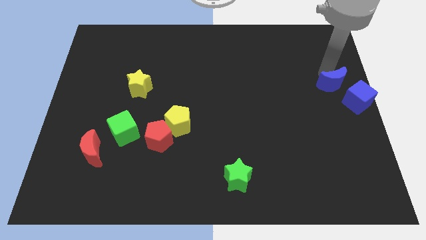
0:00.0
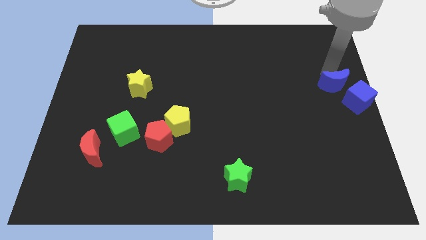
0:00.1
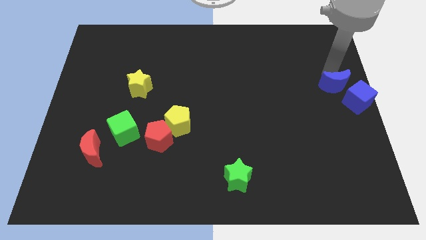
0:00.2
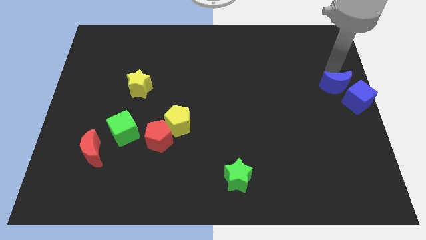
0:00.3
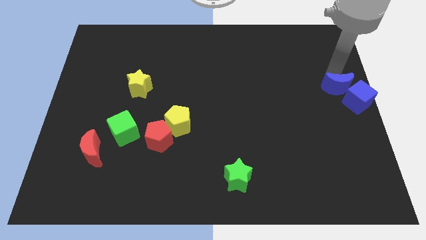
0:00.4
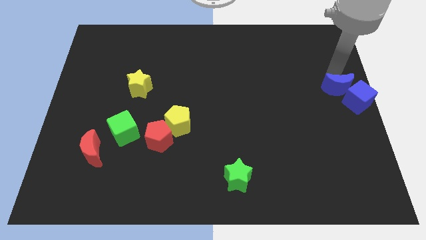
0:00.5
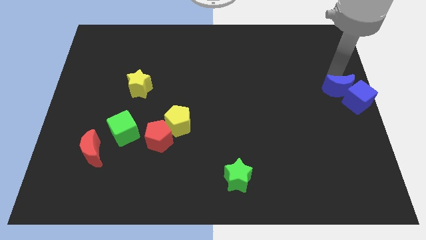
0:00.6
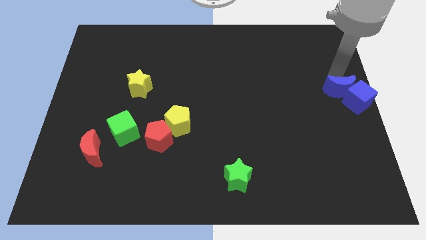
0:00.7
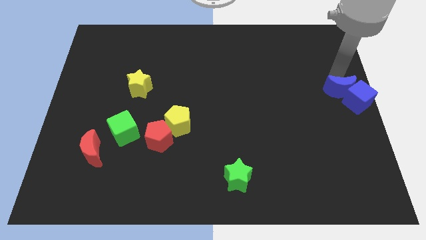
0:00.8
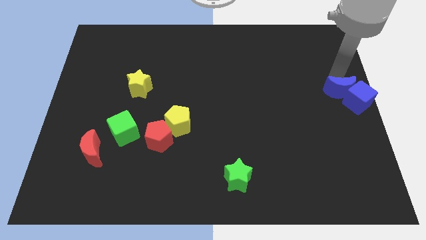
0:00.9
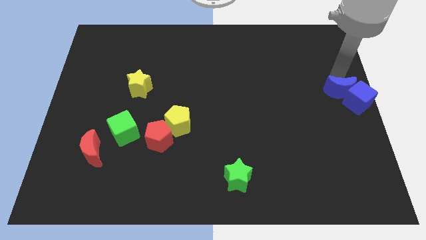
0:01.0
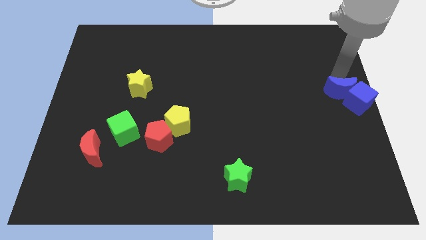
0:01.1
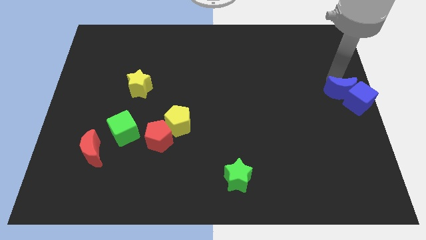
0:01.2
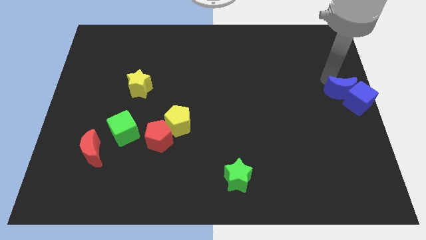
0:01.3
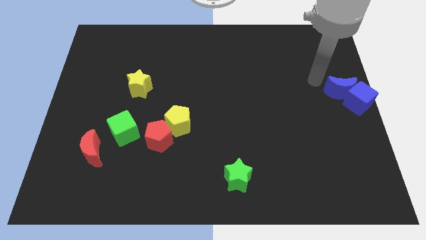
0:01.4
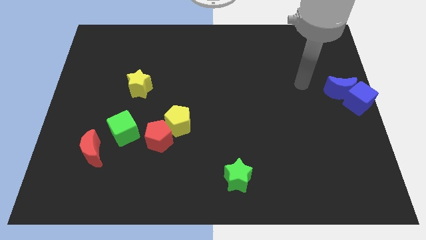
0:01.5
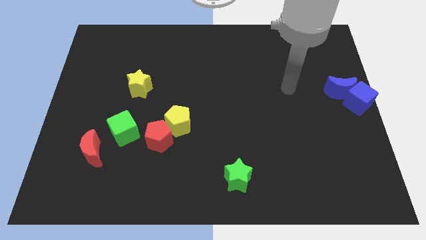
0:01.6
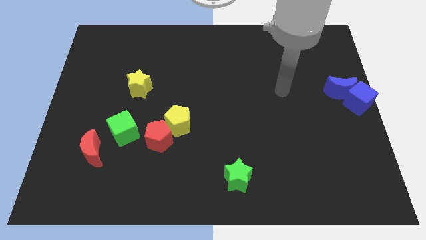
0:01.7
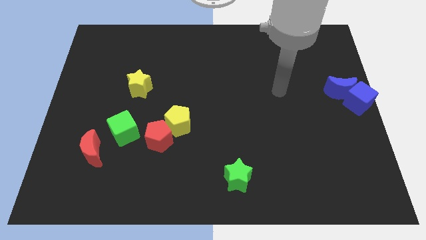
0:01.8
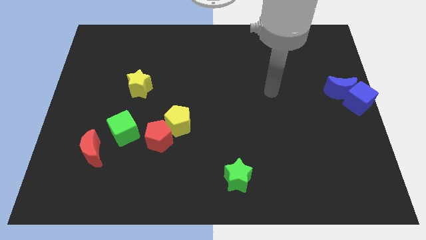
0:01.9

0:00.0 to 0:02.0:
push the blue crescent into the blue cube

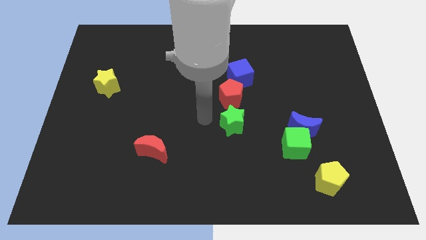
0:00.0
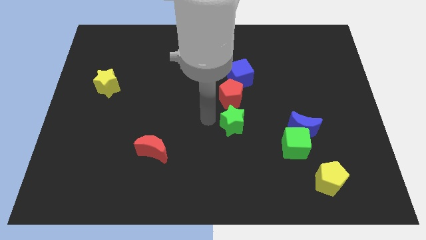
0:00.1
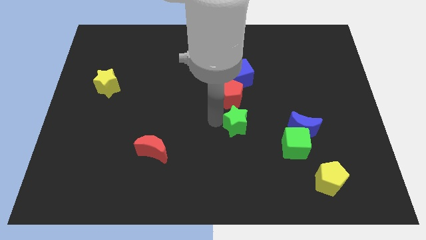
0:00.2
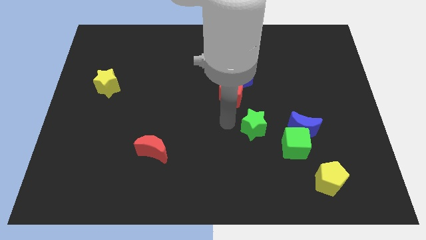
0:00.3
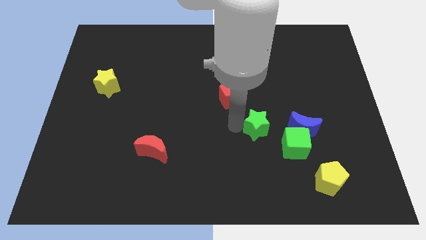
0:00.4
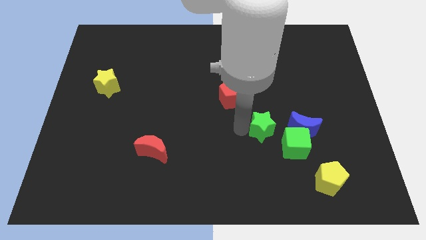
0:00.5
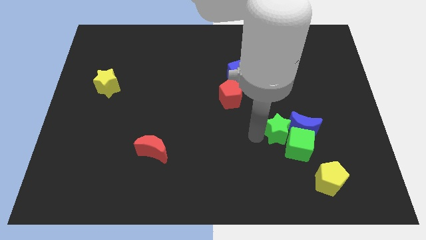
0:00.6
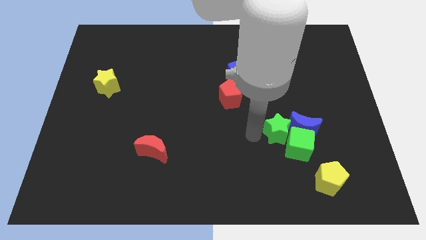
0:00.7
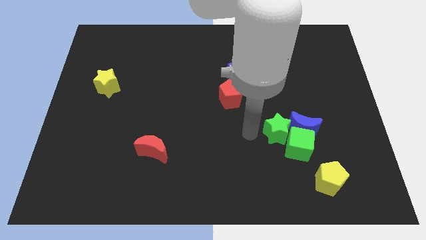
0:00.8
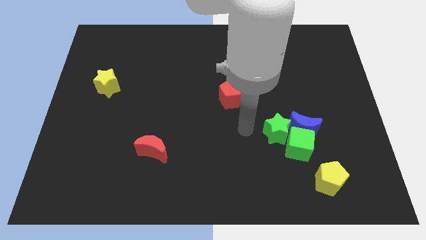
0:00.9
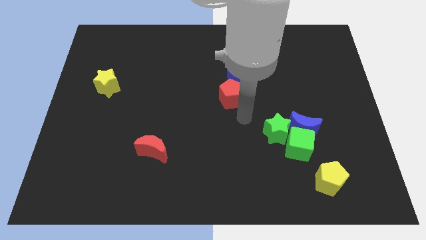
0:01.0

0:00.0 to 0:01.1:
push the green star into the blue crescent

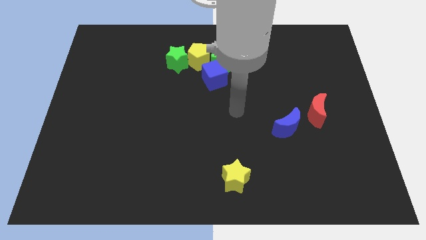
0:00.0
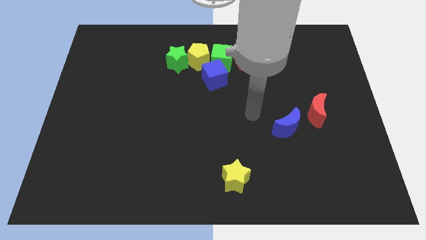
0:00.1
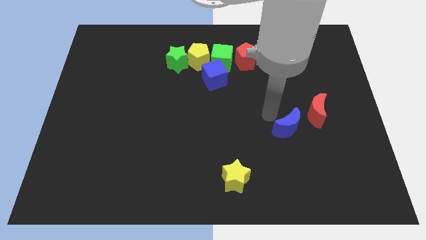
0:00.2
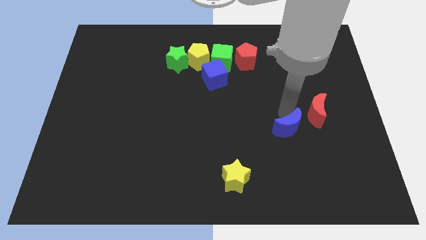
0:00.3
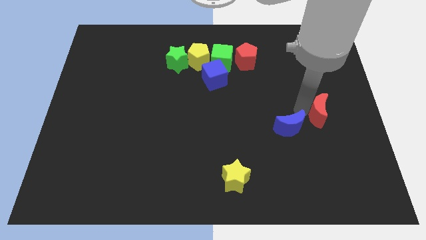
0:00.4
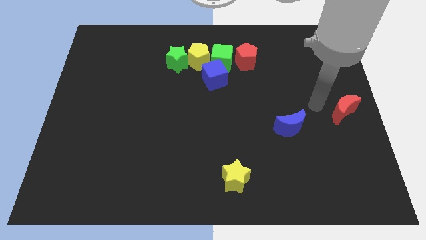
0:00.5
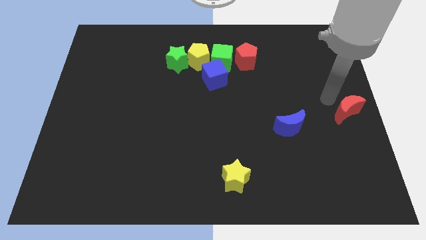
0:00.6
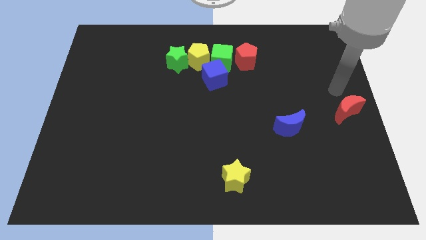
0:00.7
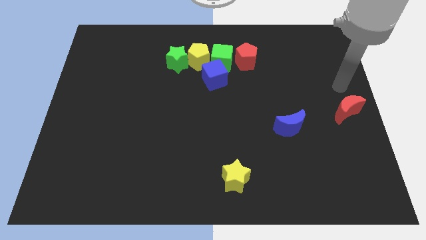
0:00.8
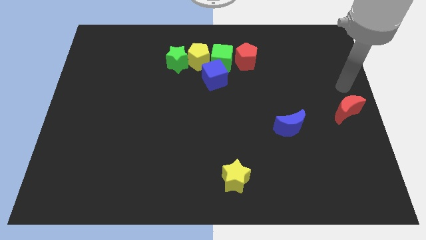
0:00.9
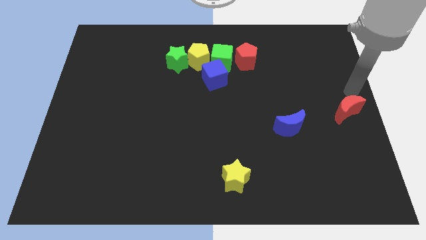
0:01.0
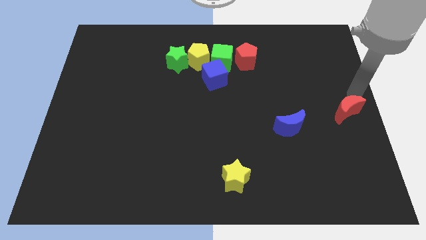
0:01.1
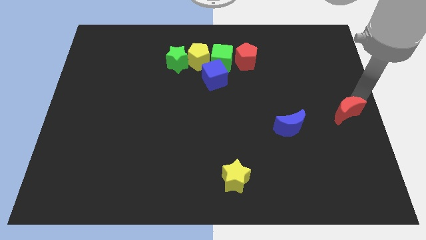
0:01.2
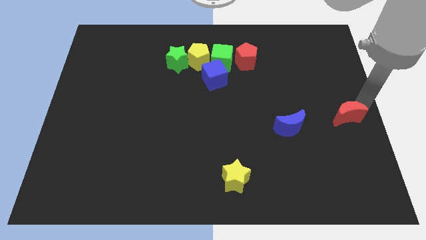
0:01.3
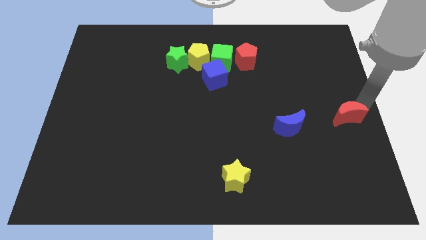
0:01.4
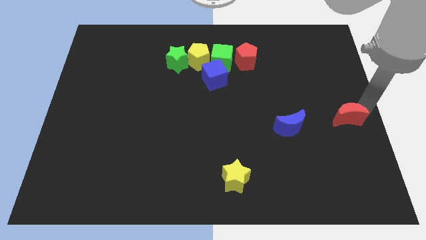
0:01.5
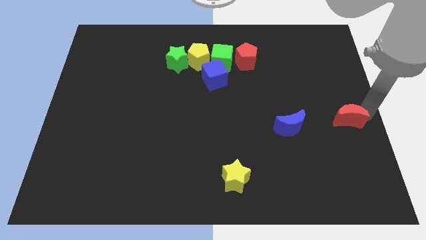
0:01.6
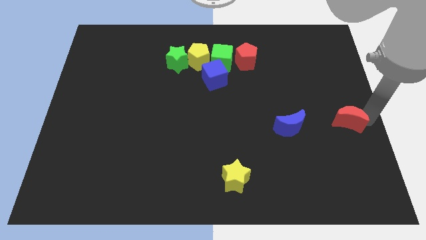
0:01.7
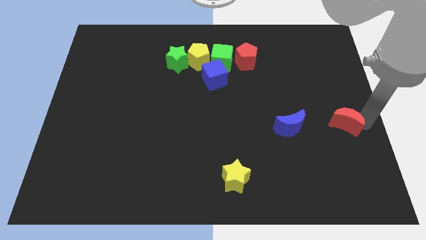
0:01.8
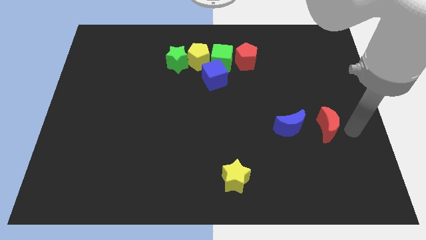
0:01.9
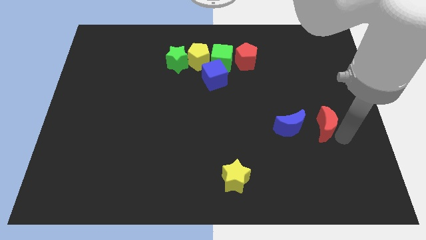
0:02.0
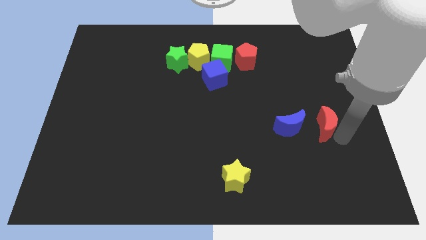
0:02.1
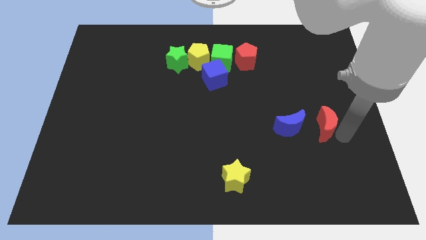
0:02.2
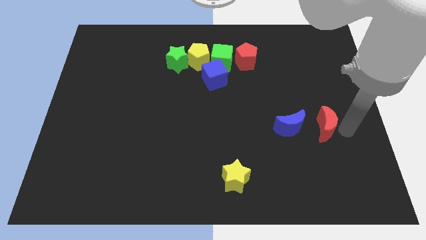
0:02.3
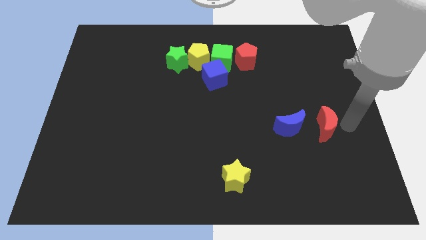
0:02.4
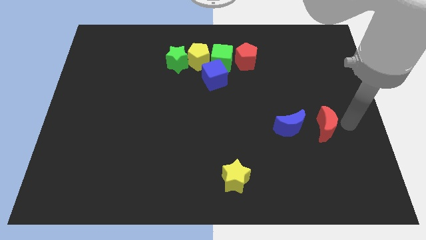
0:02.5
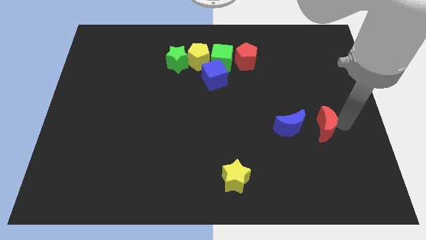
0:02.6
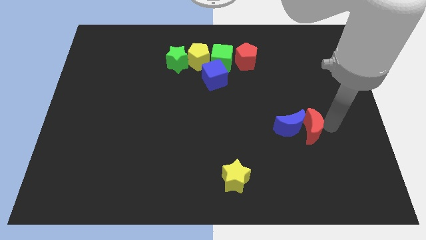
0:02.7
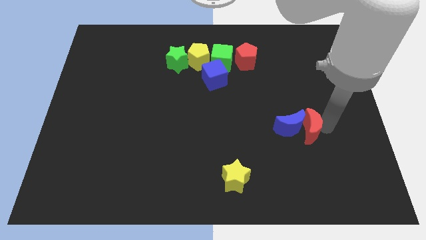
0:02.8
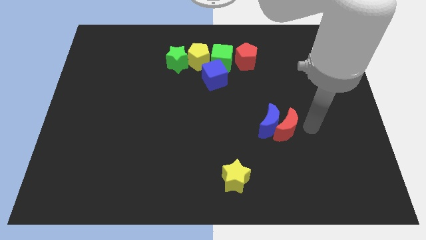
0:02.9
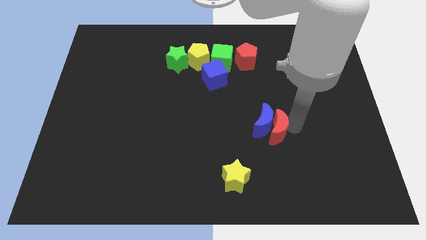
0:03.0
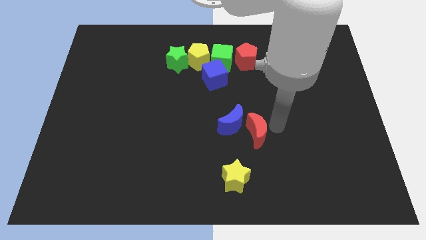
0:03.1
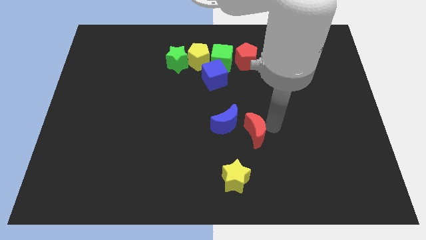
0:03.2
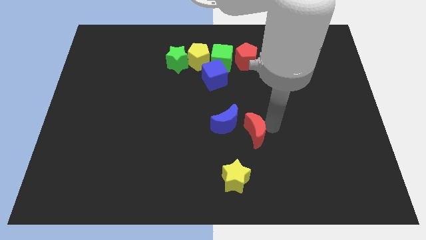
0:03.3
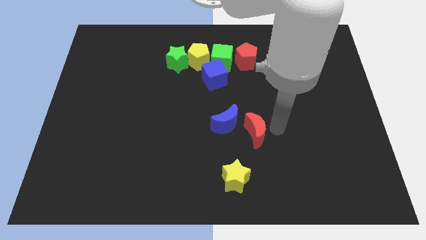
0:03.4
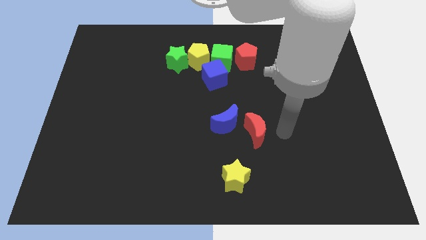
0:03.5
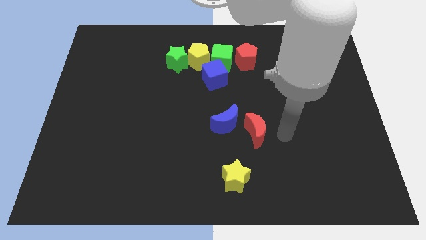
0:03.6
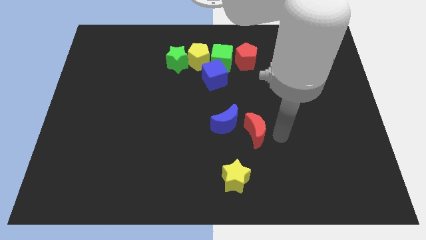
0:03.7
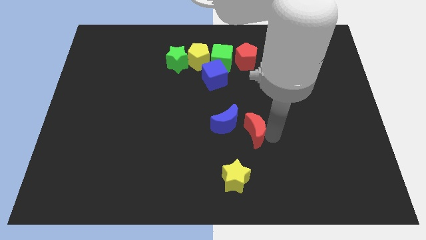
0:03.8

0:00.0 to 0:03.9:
move the red moon to the vertical bottom side of the red pentagon

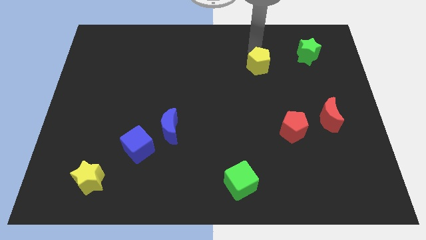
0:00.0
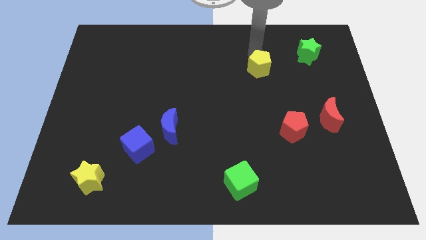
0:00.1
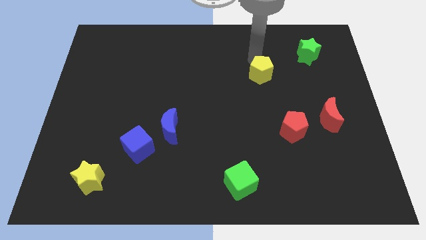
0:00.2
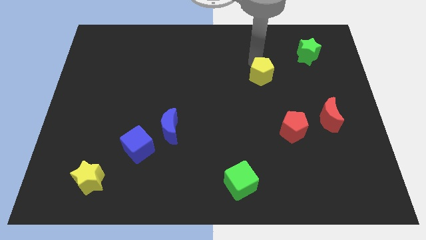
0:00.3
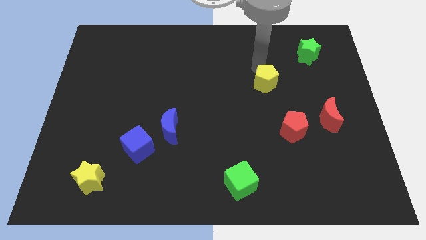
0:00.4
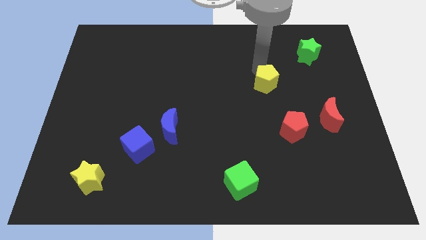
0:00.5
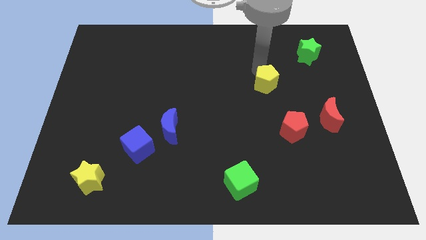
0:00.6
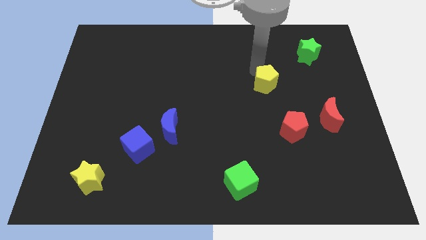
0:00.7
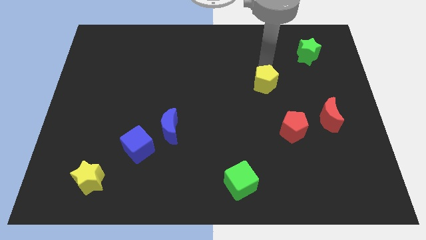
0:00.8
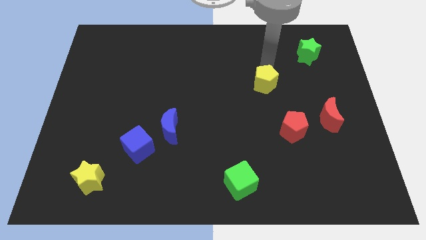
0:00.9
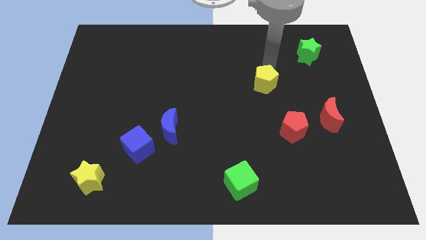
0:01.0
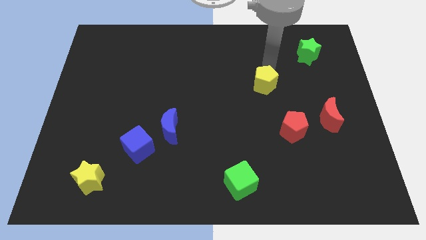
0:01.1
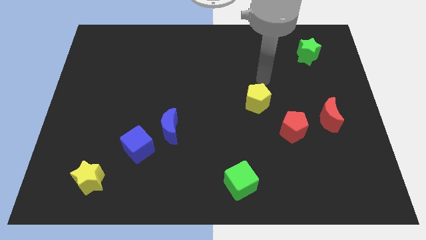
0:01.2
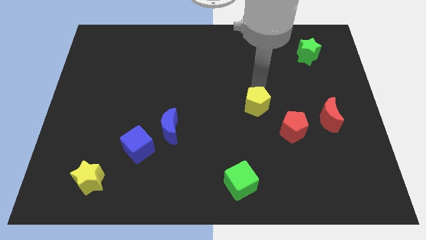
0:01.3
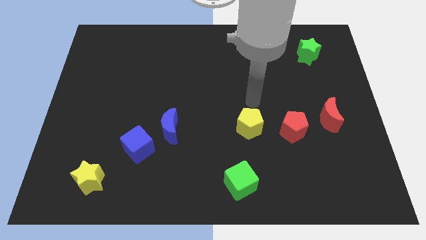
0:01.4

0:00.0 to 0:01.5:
move the yellow pentagon to the left side of the red pentagon

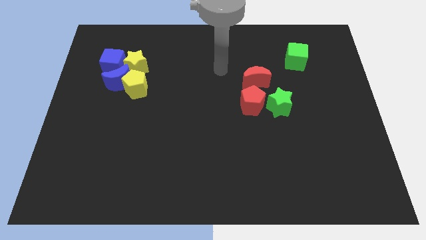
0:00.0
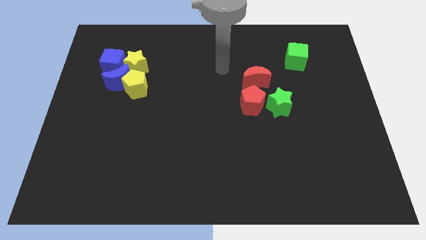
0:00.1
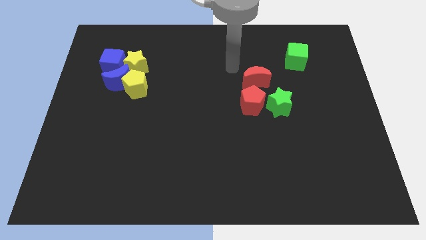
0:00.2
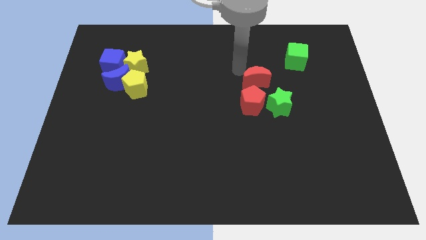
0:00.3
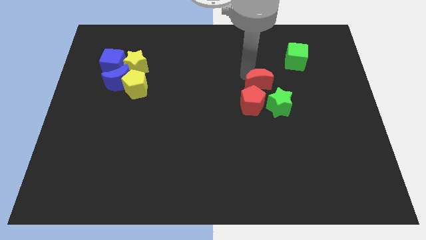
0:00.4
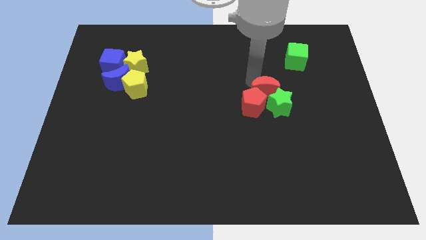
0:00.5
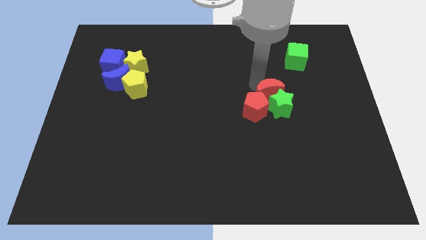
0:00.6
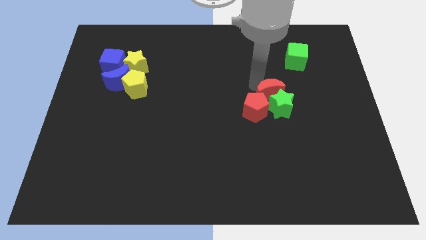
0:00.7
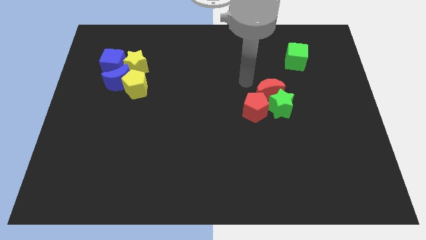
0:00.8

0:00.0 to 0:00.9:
push the red moon towards the top left to the red pentagon
